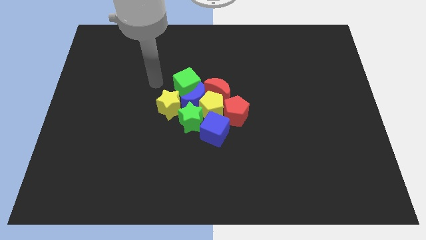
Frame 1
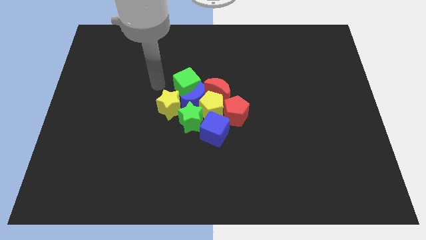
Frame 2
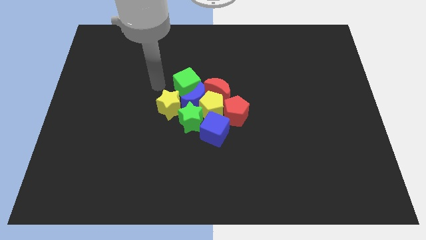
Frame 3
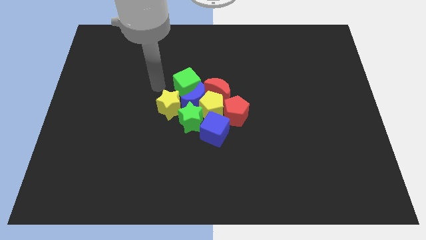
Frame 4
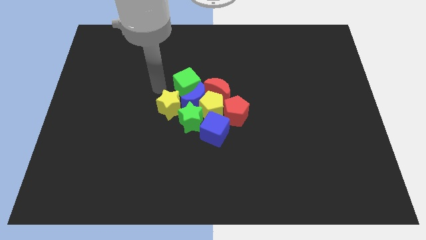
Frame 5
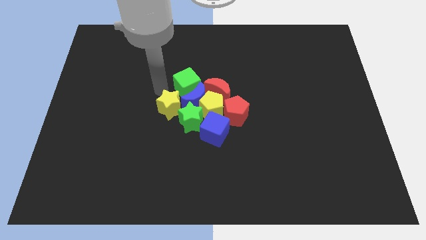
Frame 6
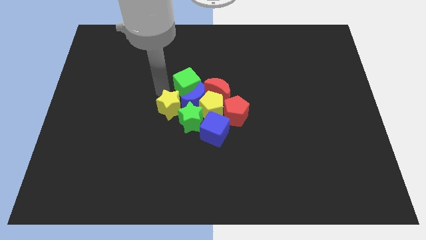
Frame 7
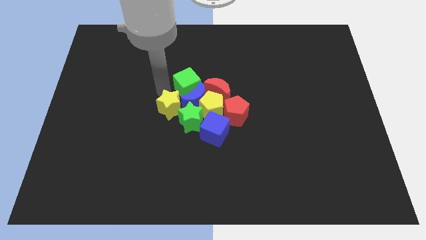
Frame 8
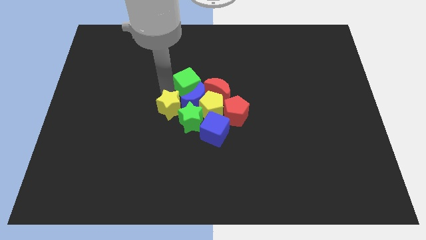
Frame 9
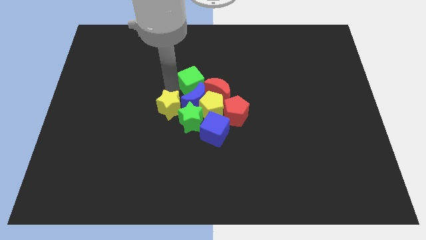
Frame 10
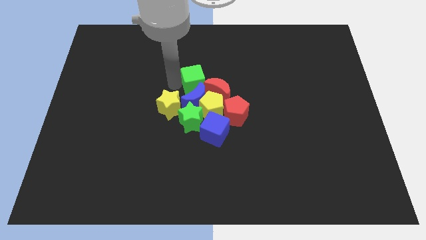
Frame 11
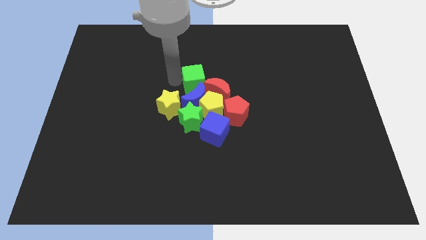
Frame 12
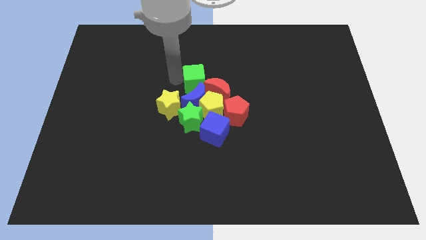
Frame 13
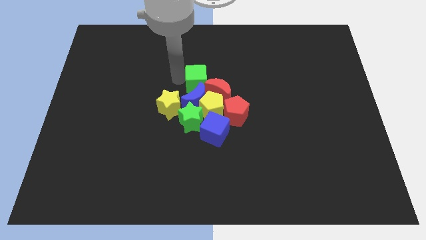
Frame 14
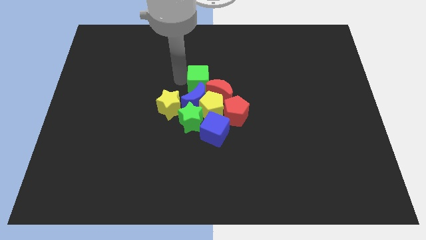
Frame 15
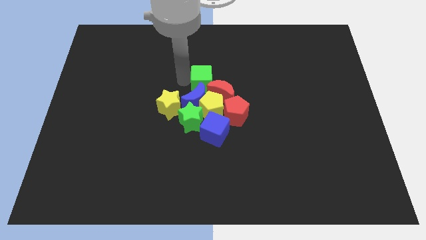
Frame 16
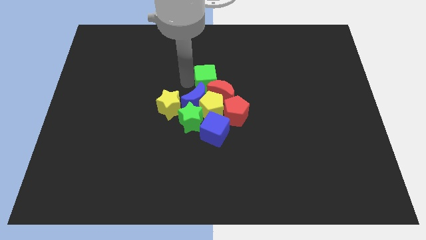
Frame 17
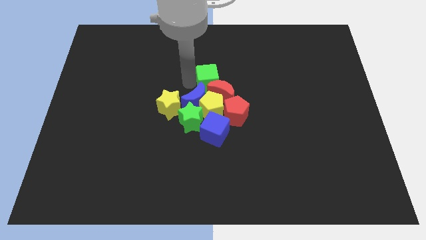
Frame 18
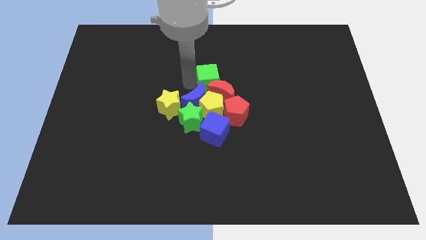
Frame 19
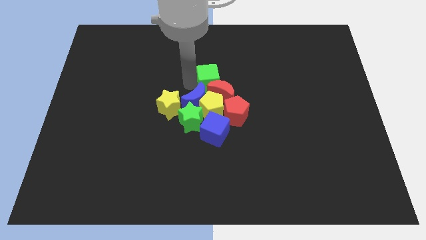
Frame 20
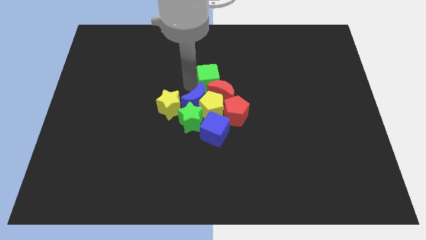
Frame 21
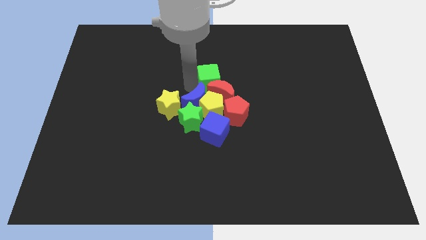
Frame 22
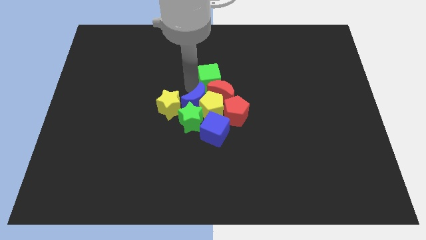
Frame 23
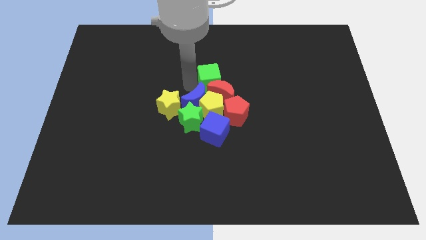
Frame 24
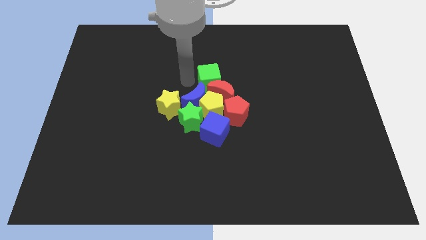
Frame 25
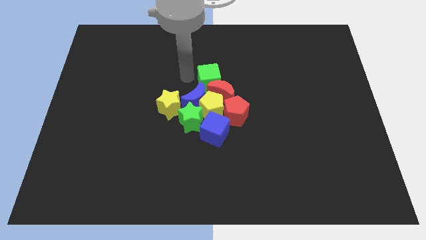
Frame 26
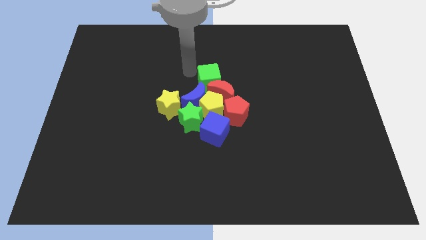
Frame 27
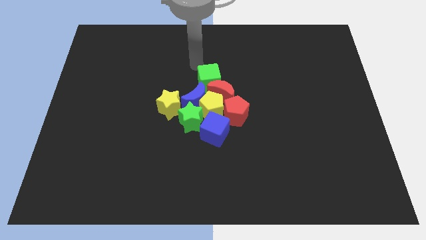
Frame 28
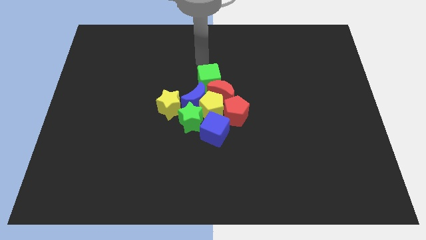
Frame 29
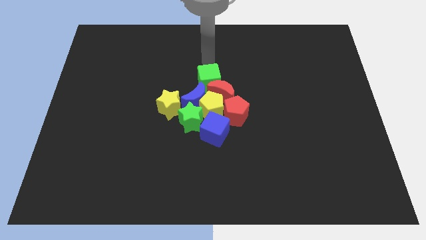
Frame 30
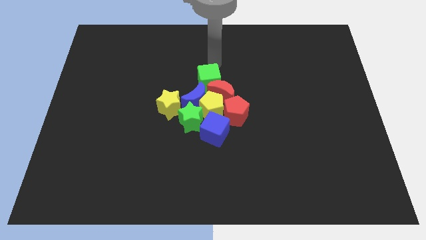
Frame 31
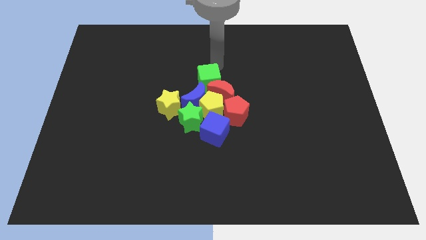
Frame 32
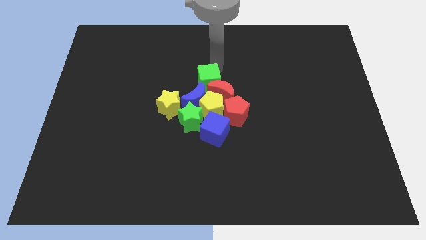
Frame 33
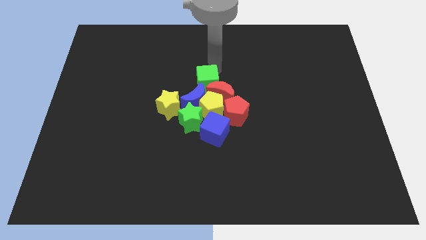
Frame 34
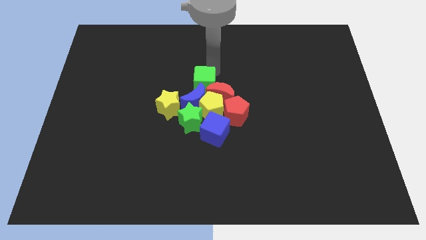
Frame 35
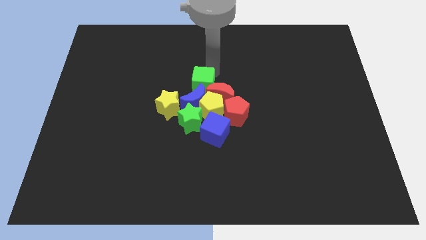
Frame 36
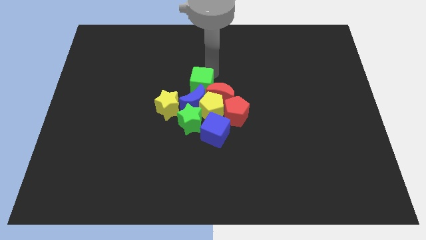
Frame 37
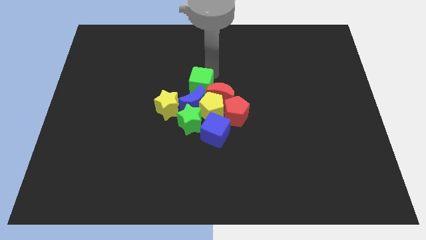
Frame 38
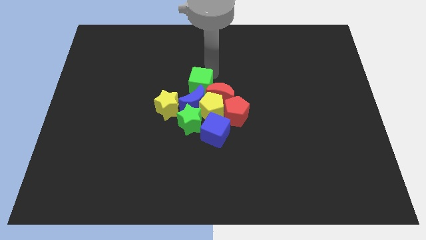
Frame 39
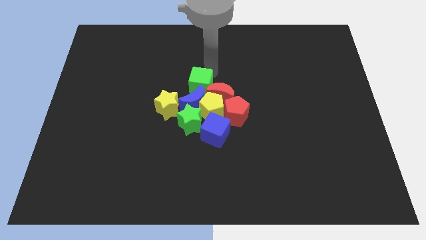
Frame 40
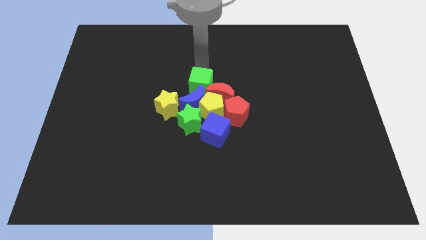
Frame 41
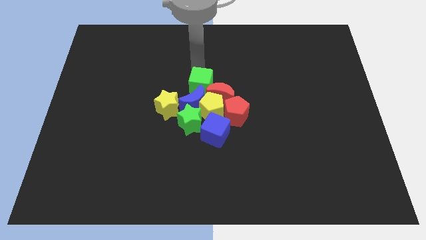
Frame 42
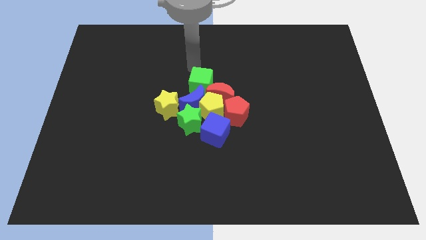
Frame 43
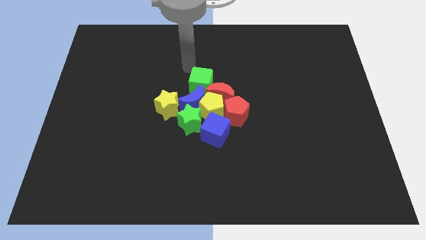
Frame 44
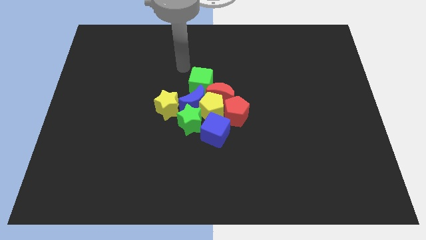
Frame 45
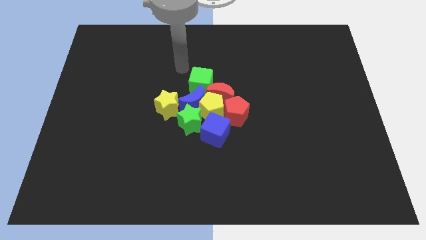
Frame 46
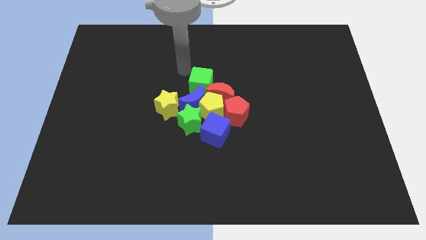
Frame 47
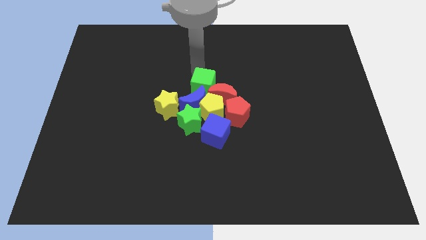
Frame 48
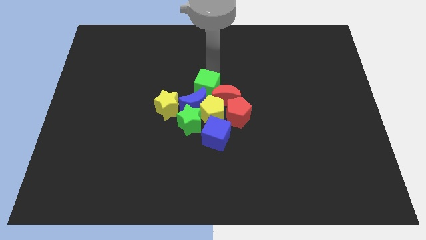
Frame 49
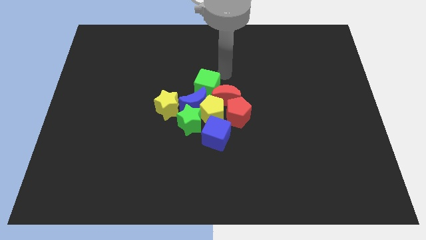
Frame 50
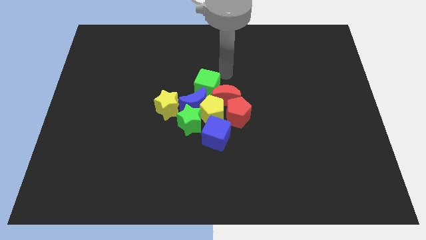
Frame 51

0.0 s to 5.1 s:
place the green cube to the top left side of the red crescent

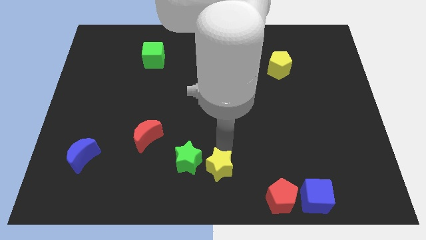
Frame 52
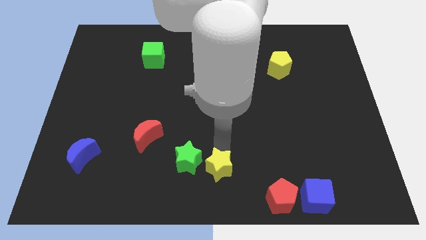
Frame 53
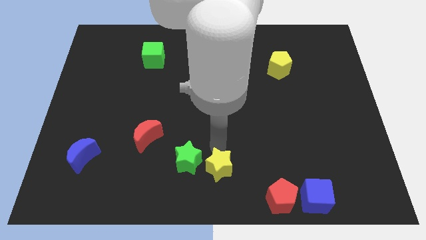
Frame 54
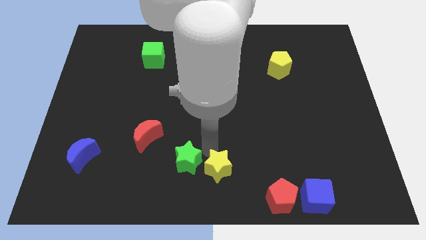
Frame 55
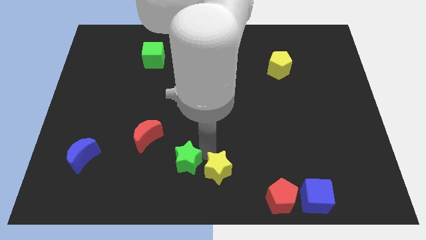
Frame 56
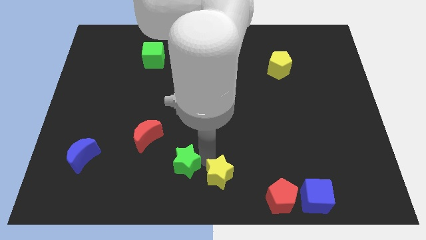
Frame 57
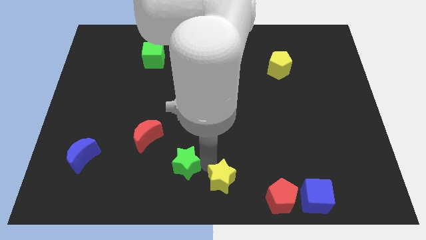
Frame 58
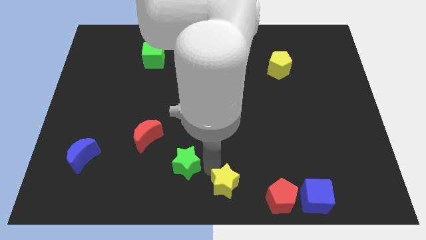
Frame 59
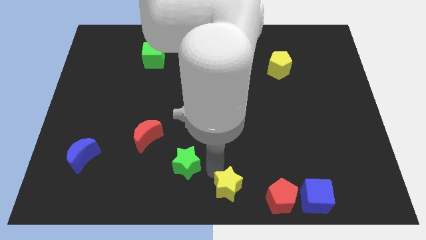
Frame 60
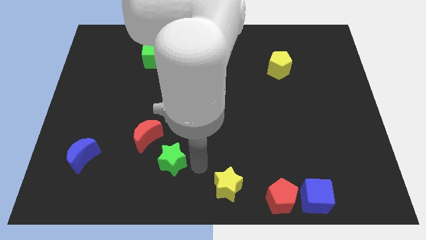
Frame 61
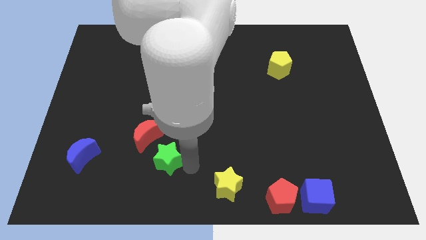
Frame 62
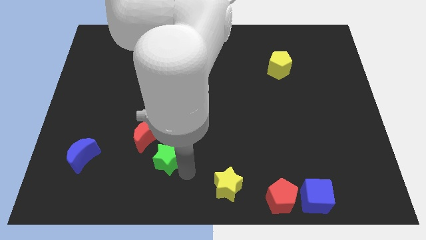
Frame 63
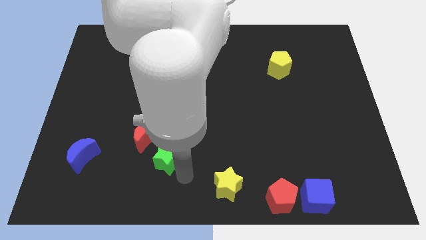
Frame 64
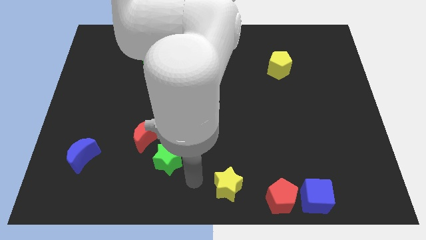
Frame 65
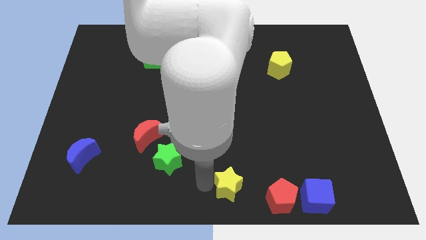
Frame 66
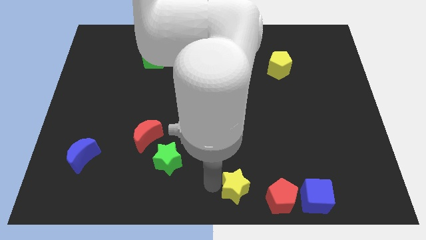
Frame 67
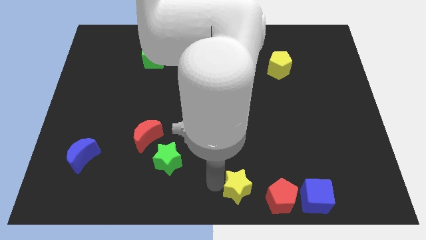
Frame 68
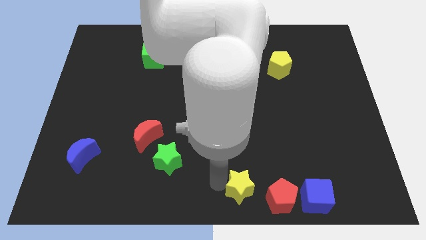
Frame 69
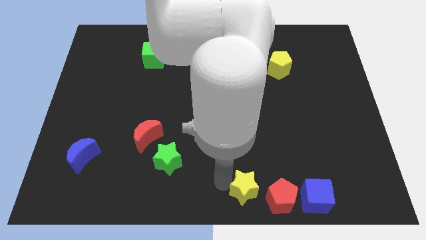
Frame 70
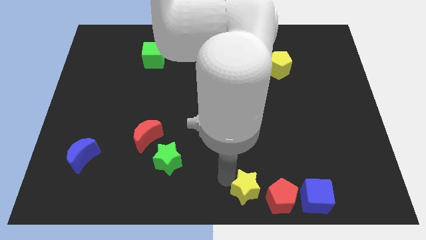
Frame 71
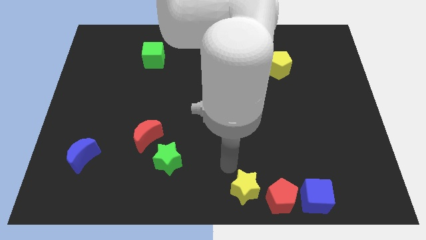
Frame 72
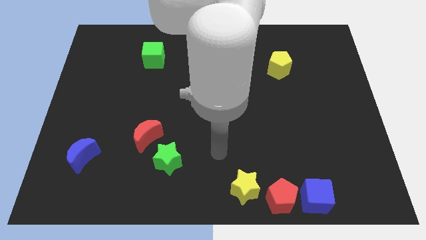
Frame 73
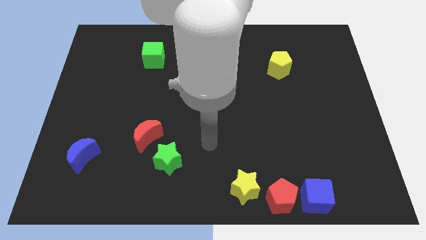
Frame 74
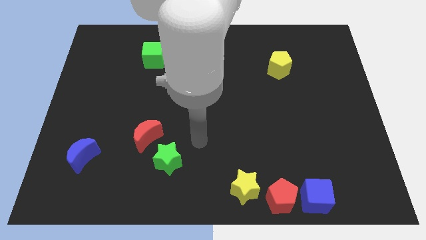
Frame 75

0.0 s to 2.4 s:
move the yellow star close to the red pentagon

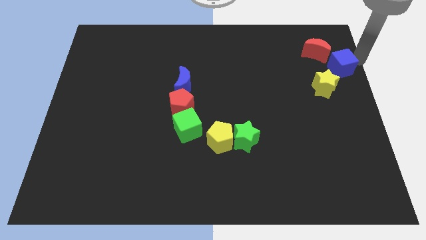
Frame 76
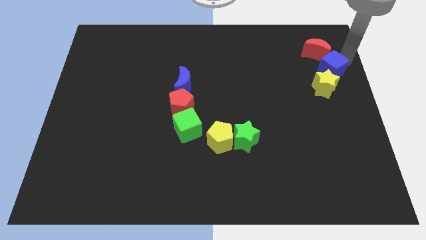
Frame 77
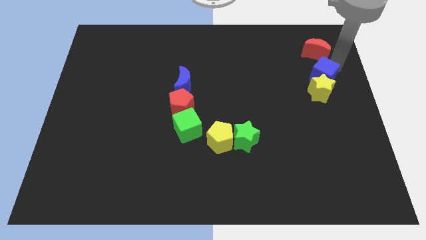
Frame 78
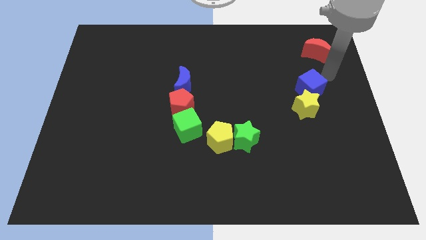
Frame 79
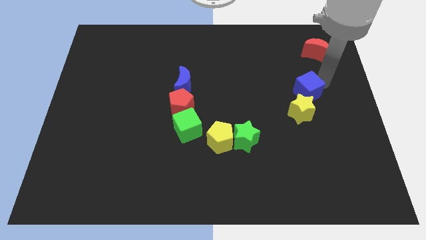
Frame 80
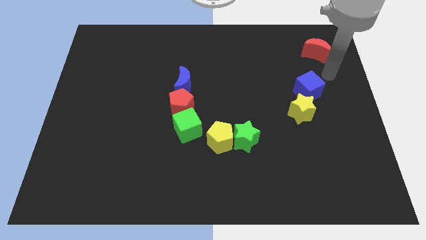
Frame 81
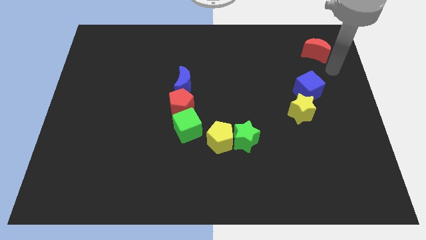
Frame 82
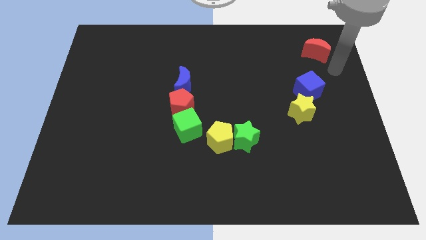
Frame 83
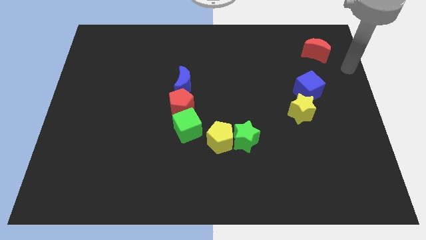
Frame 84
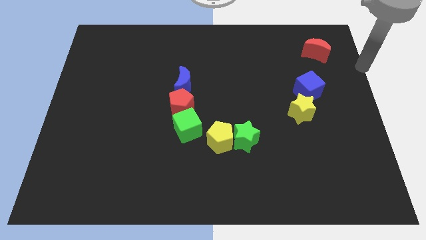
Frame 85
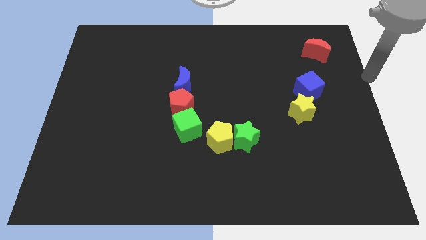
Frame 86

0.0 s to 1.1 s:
push blue cube along with yellow star slightly down

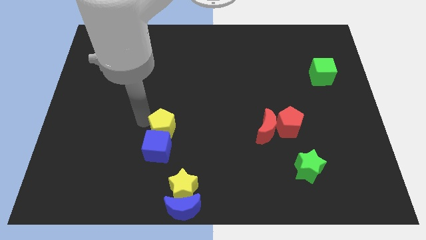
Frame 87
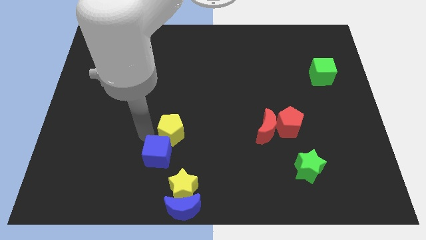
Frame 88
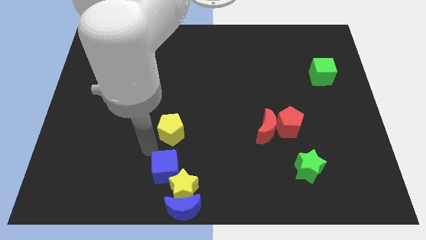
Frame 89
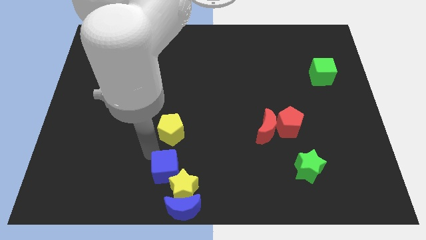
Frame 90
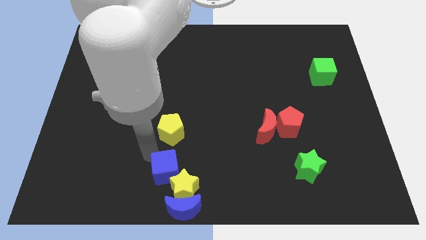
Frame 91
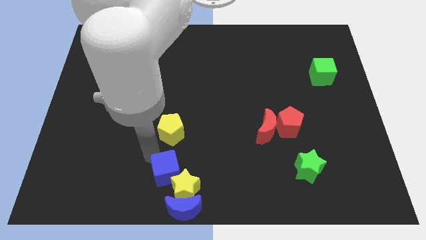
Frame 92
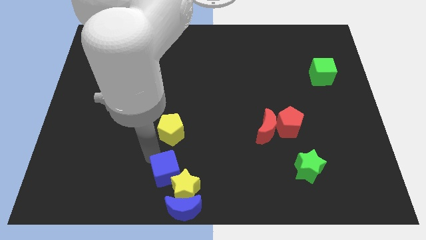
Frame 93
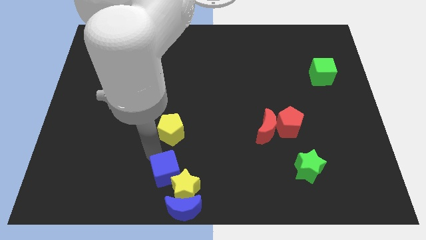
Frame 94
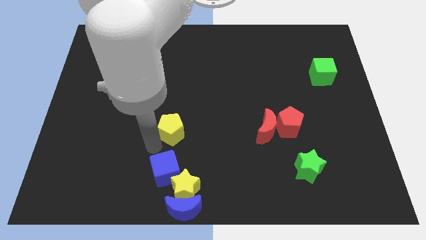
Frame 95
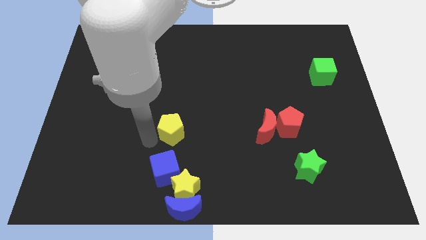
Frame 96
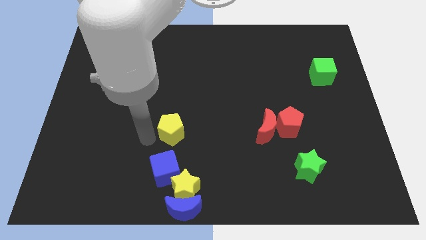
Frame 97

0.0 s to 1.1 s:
push the blue cube into the yellow star
